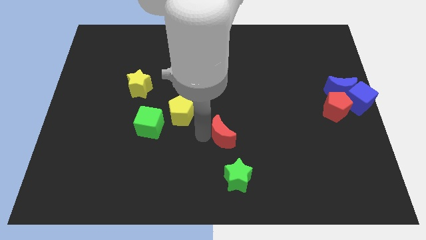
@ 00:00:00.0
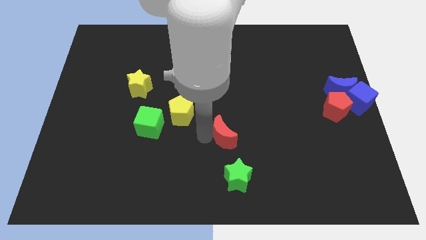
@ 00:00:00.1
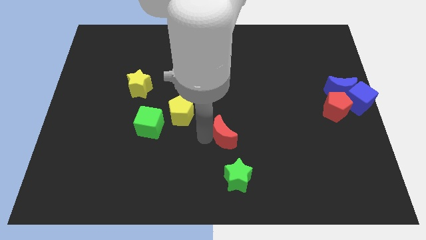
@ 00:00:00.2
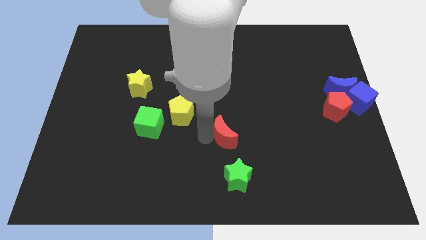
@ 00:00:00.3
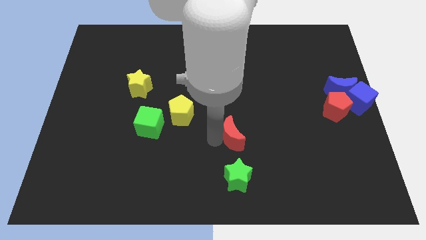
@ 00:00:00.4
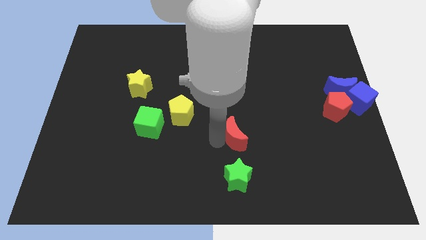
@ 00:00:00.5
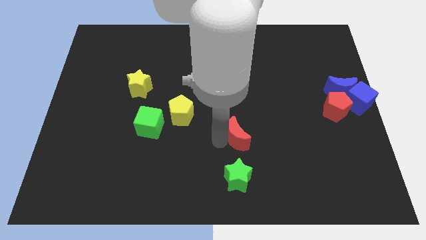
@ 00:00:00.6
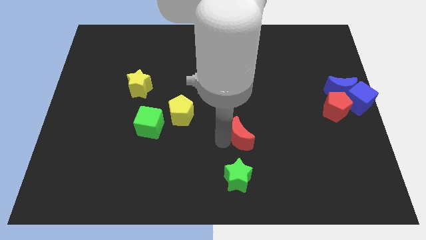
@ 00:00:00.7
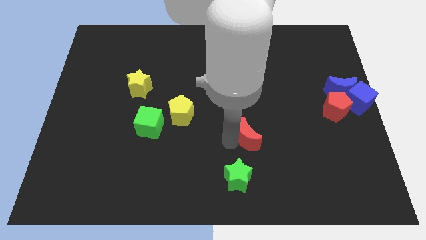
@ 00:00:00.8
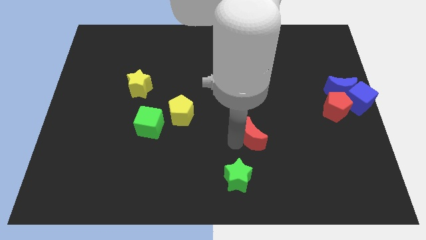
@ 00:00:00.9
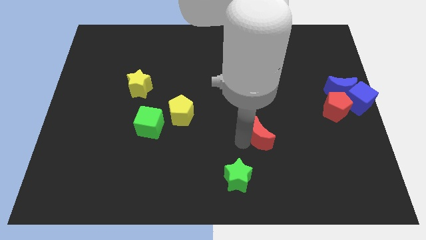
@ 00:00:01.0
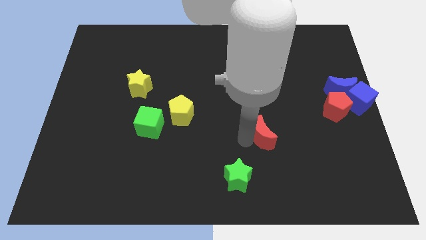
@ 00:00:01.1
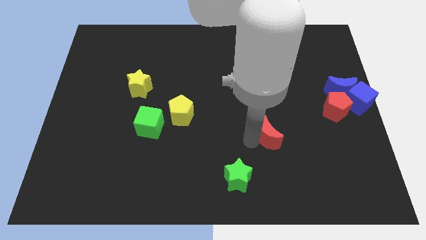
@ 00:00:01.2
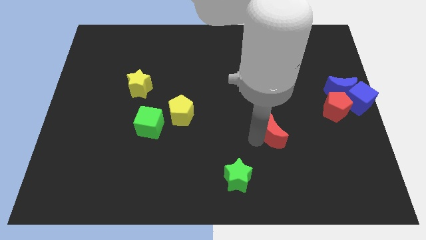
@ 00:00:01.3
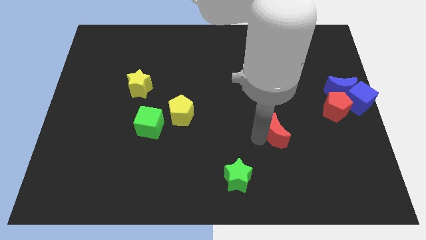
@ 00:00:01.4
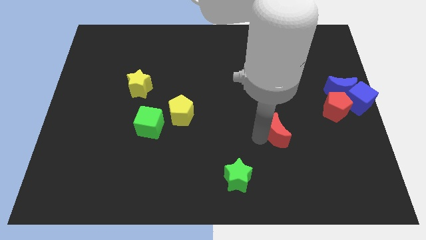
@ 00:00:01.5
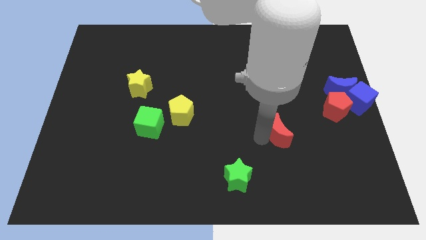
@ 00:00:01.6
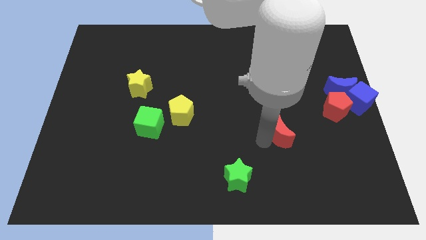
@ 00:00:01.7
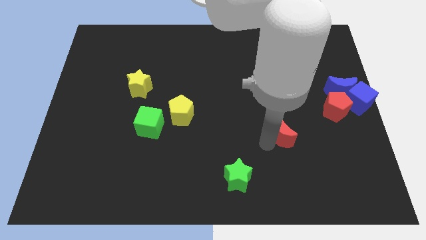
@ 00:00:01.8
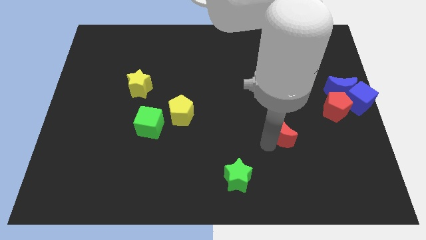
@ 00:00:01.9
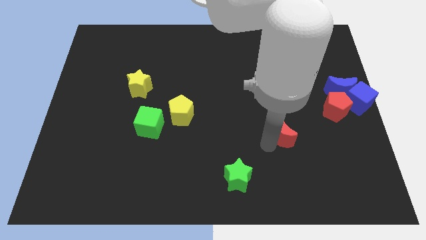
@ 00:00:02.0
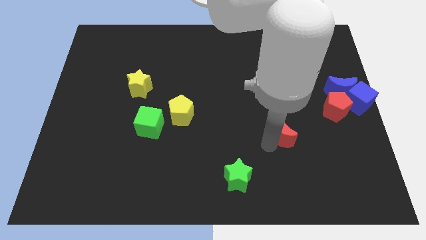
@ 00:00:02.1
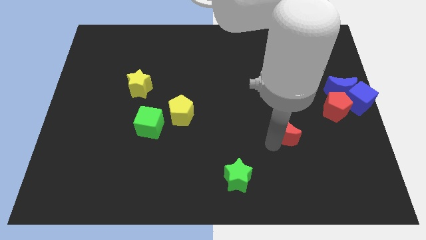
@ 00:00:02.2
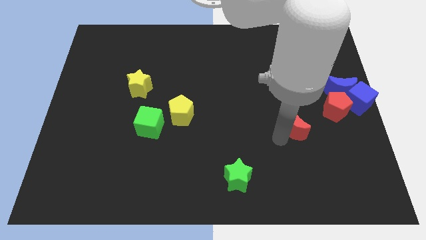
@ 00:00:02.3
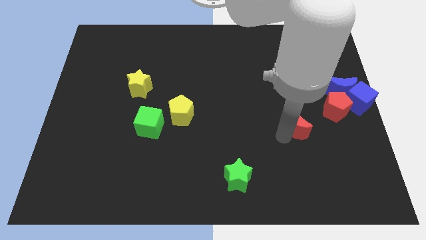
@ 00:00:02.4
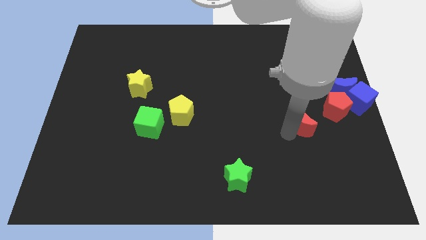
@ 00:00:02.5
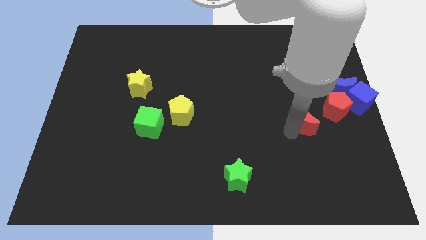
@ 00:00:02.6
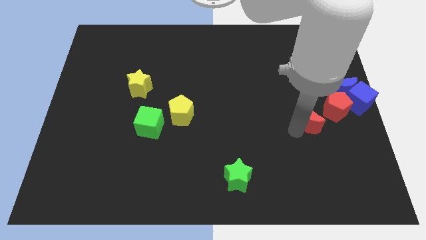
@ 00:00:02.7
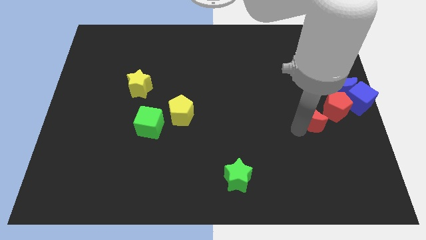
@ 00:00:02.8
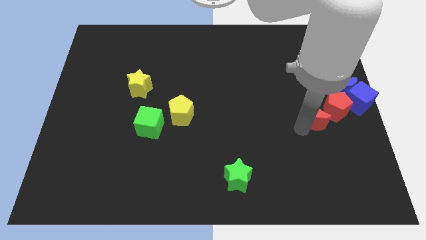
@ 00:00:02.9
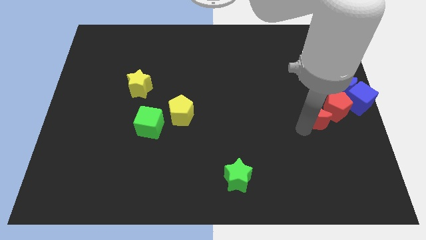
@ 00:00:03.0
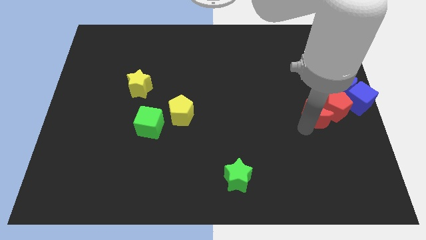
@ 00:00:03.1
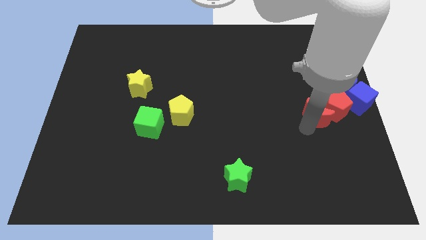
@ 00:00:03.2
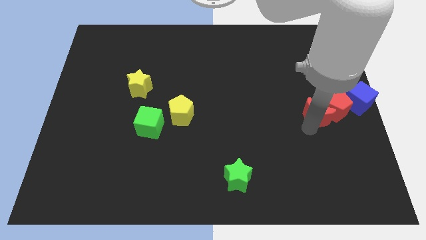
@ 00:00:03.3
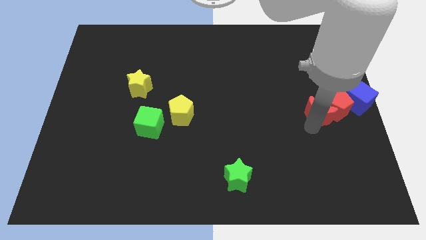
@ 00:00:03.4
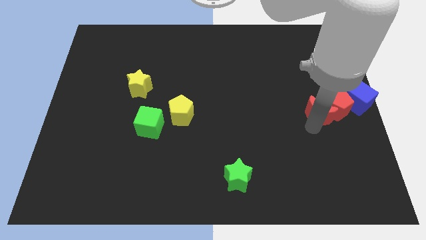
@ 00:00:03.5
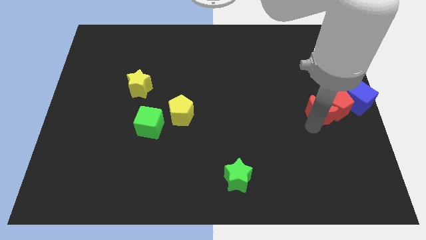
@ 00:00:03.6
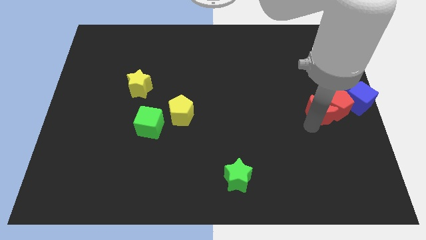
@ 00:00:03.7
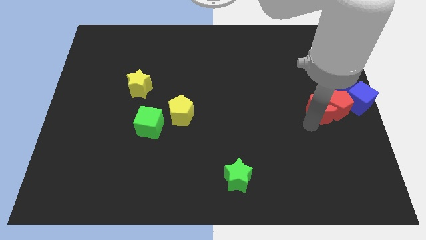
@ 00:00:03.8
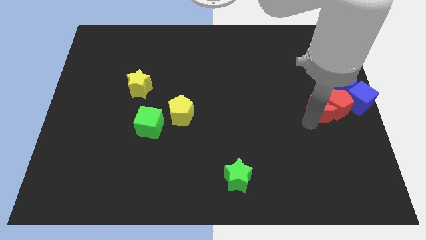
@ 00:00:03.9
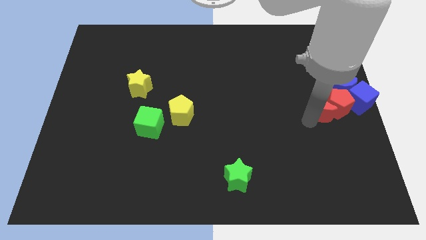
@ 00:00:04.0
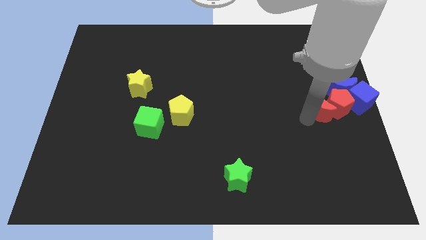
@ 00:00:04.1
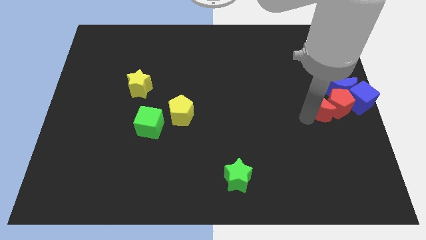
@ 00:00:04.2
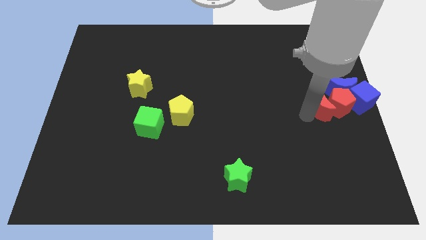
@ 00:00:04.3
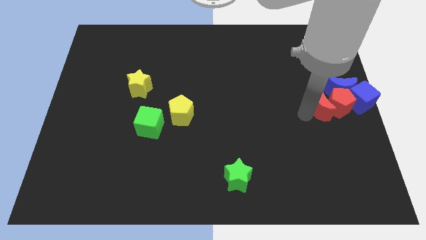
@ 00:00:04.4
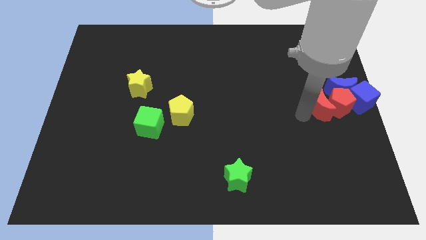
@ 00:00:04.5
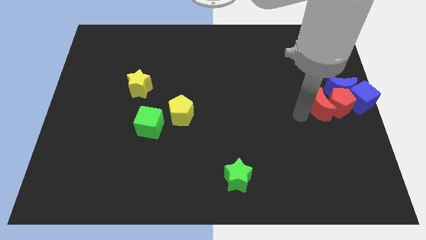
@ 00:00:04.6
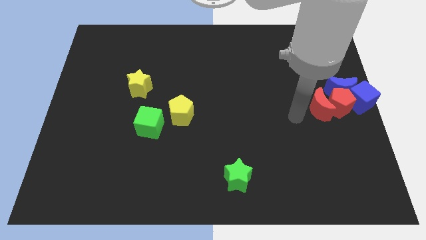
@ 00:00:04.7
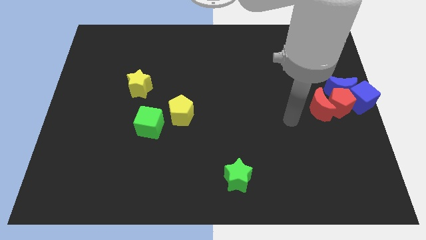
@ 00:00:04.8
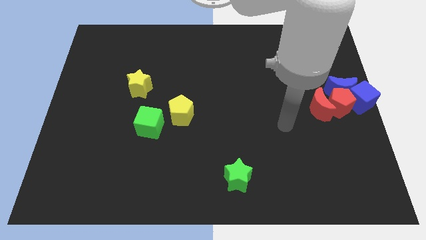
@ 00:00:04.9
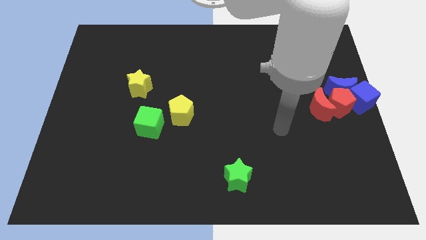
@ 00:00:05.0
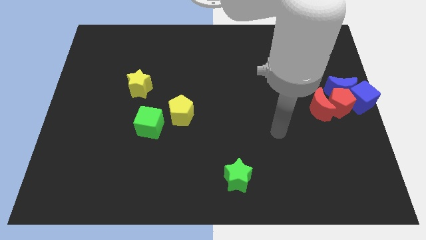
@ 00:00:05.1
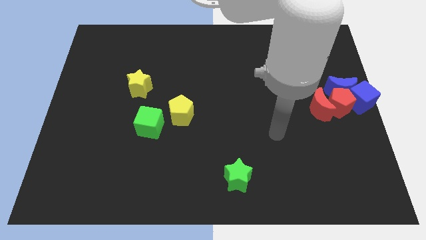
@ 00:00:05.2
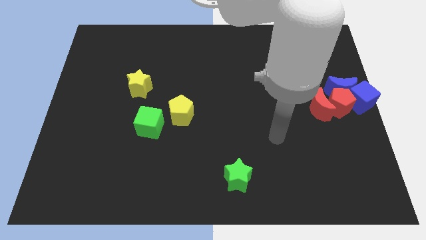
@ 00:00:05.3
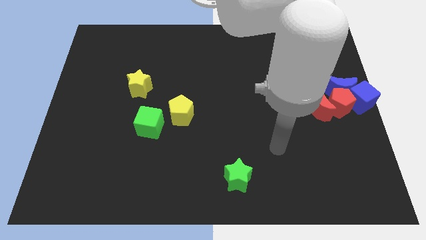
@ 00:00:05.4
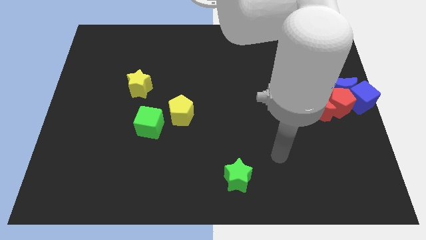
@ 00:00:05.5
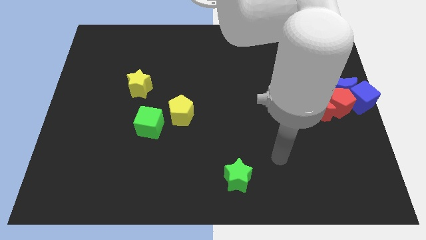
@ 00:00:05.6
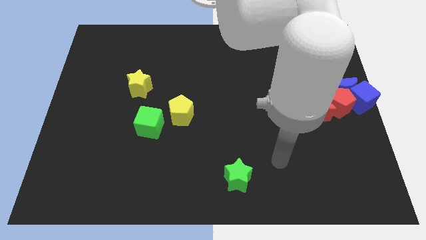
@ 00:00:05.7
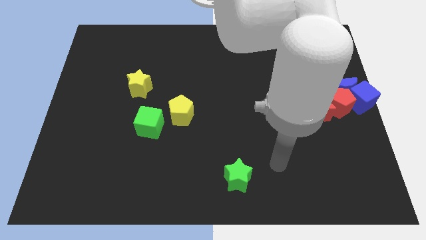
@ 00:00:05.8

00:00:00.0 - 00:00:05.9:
move the red crescent to the left of the red pentagon

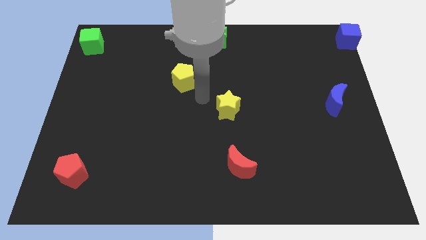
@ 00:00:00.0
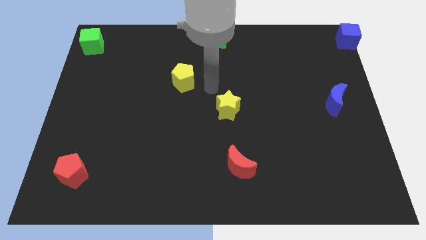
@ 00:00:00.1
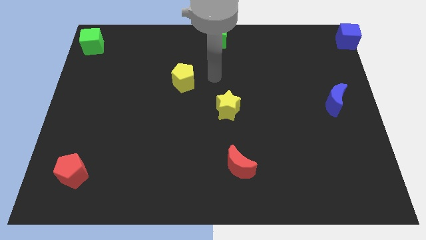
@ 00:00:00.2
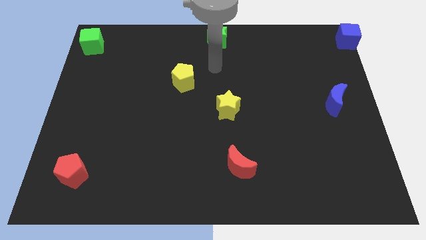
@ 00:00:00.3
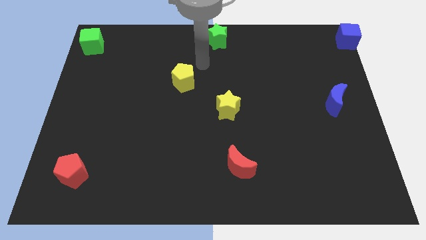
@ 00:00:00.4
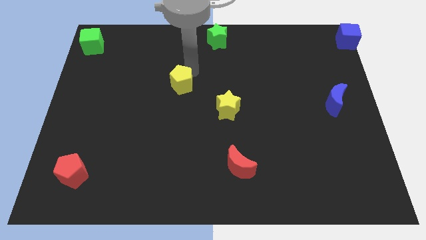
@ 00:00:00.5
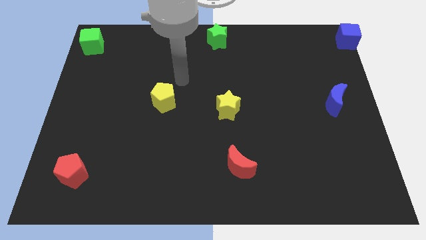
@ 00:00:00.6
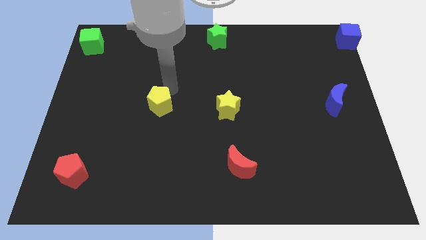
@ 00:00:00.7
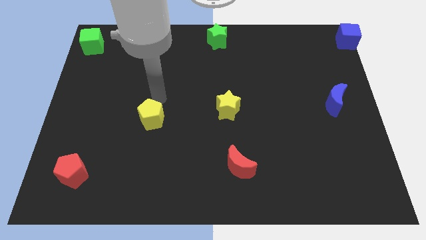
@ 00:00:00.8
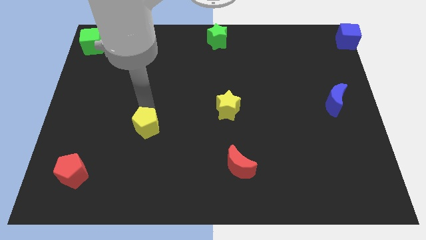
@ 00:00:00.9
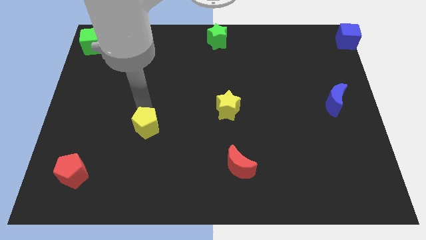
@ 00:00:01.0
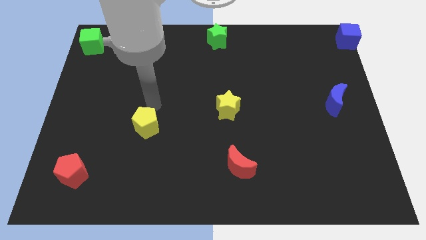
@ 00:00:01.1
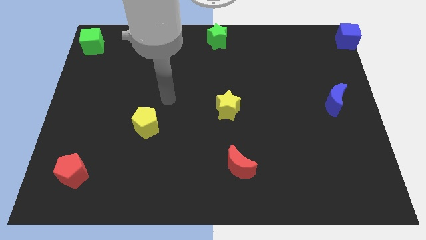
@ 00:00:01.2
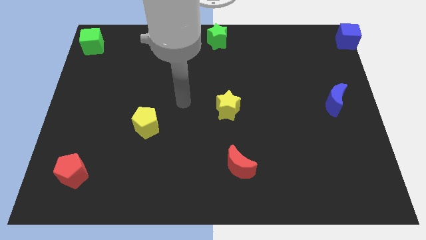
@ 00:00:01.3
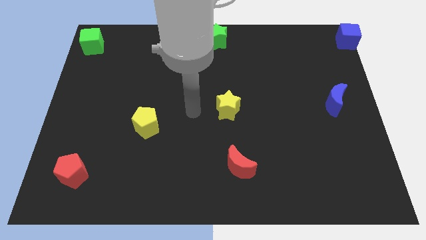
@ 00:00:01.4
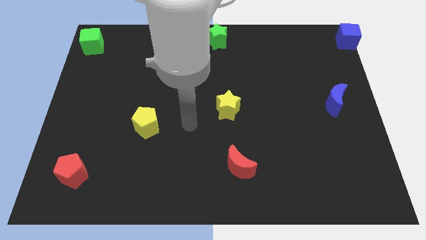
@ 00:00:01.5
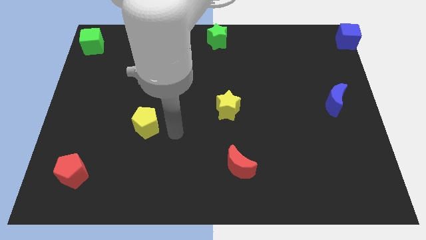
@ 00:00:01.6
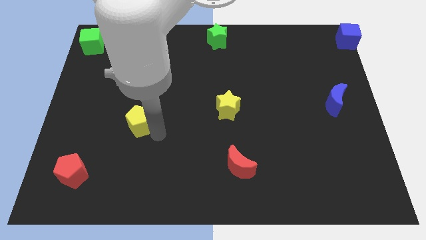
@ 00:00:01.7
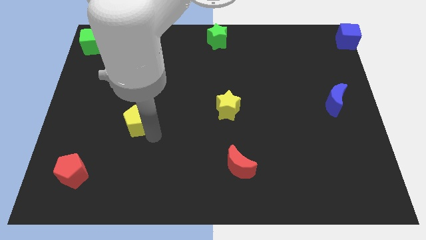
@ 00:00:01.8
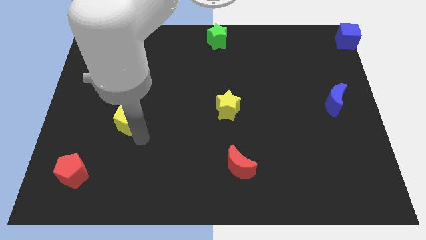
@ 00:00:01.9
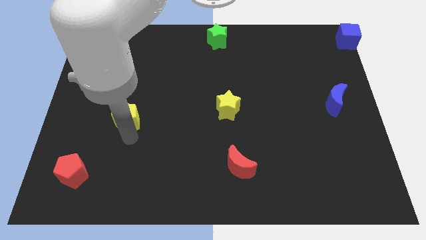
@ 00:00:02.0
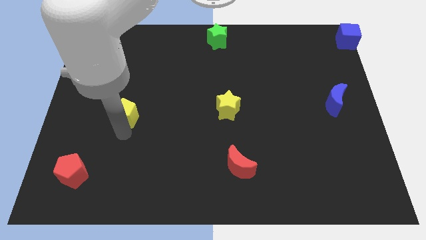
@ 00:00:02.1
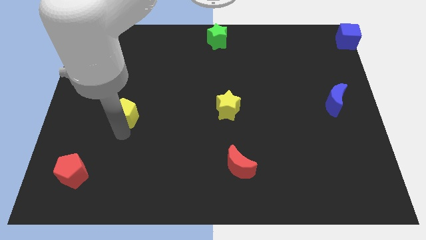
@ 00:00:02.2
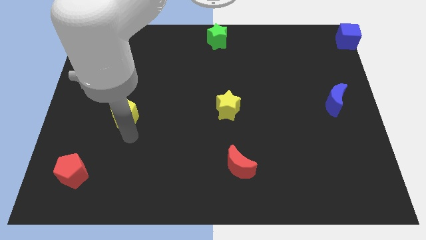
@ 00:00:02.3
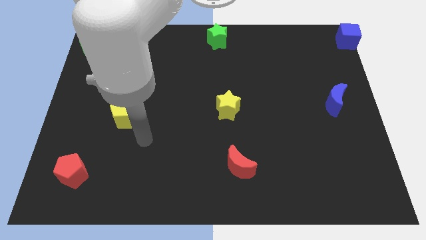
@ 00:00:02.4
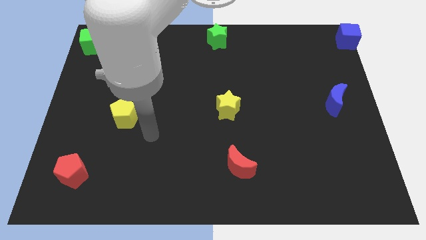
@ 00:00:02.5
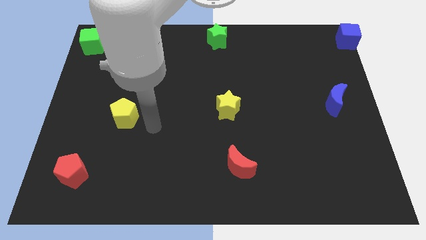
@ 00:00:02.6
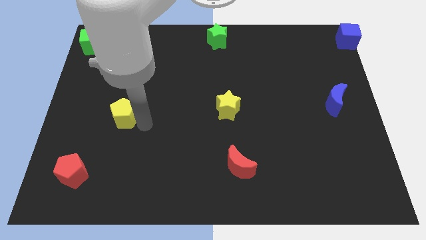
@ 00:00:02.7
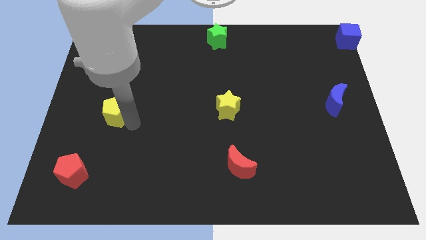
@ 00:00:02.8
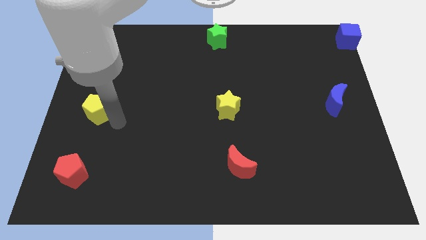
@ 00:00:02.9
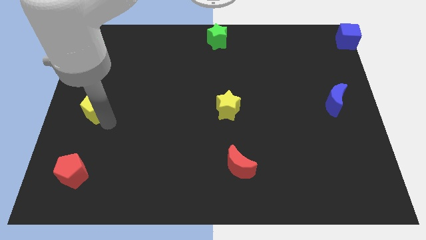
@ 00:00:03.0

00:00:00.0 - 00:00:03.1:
push the yellow pentagon to the top of the red pentagon
